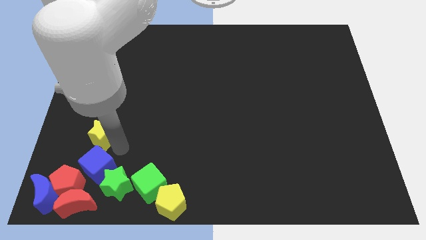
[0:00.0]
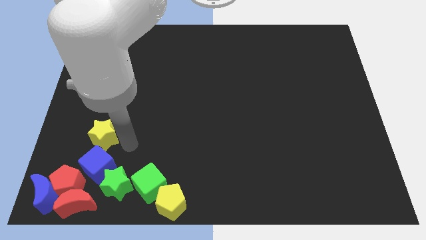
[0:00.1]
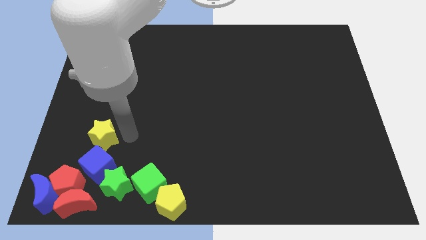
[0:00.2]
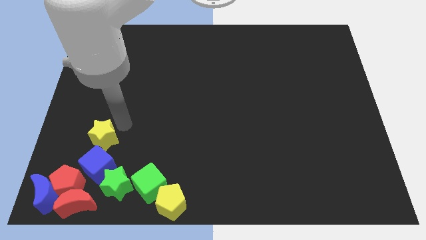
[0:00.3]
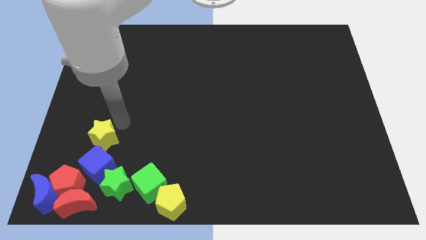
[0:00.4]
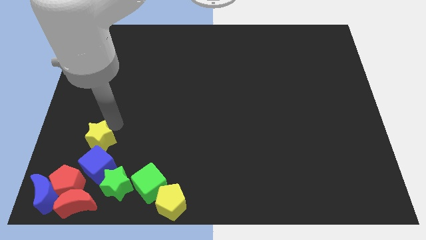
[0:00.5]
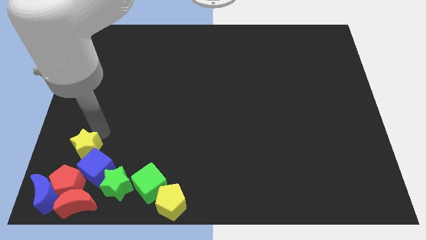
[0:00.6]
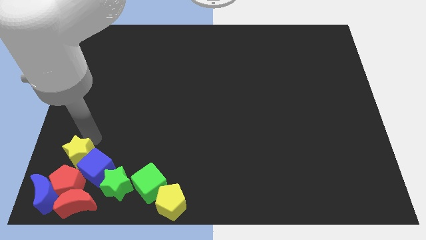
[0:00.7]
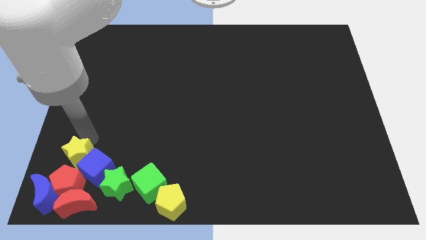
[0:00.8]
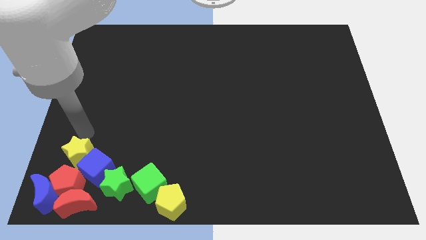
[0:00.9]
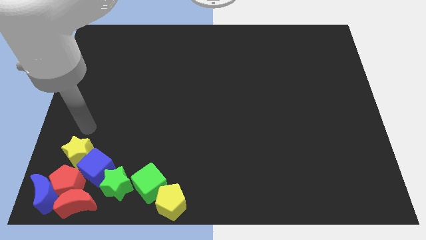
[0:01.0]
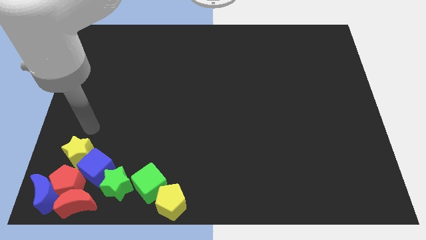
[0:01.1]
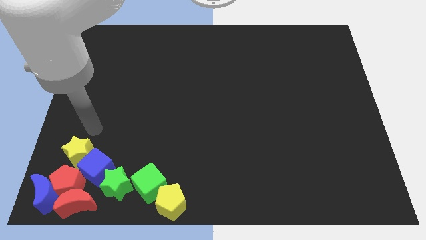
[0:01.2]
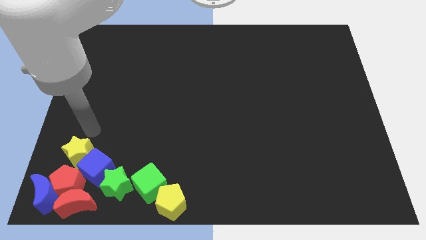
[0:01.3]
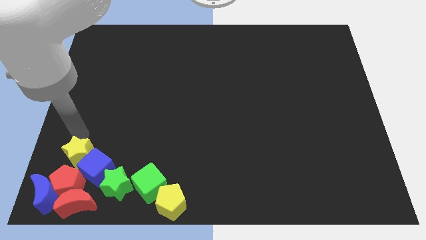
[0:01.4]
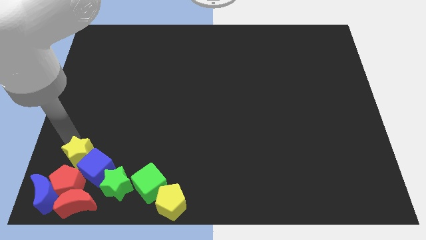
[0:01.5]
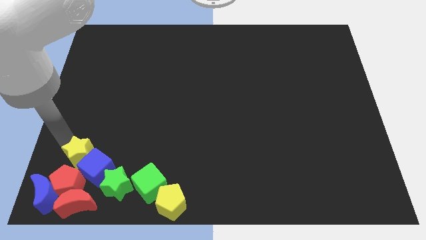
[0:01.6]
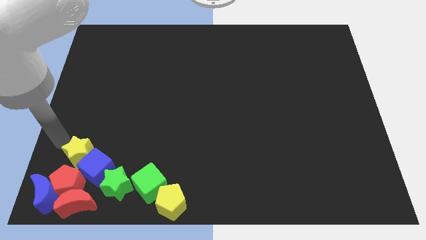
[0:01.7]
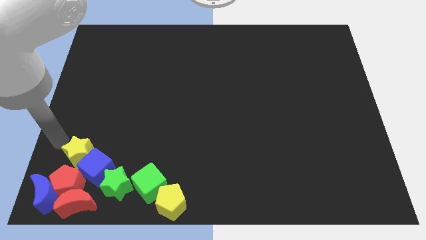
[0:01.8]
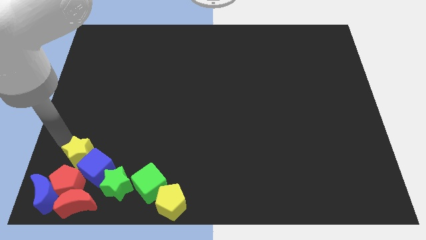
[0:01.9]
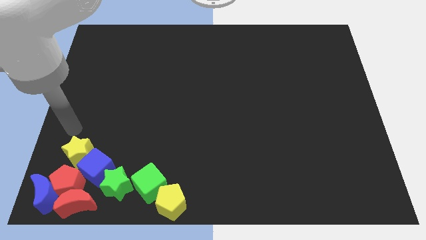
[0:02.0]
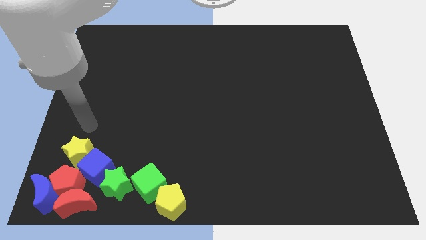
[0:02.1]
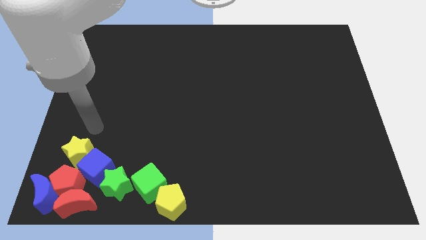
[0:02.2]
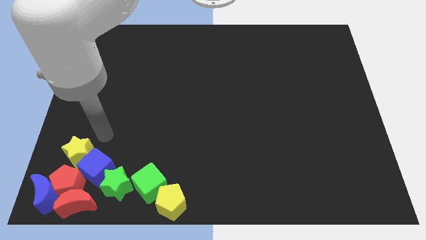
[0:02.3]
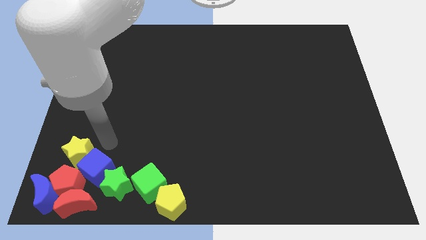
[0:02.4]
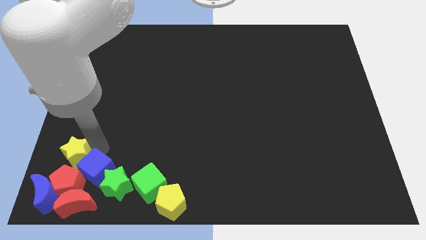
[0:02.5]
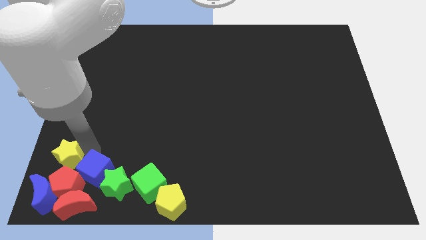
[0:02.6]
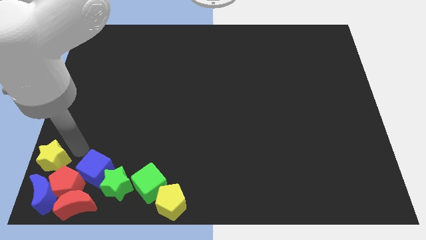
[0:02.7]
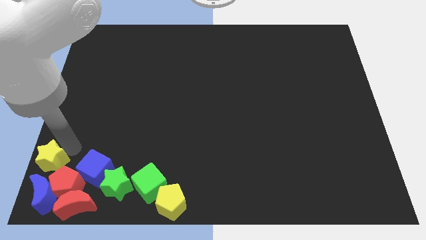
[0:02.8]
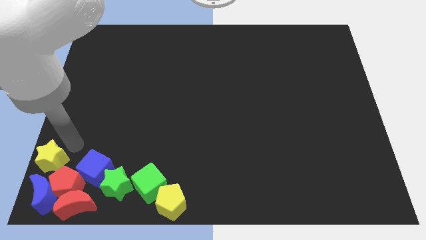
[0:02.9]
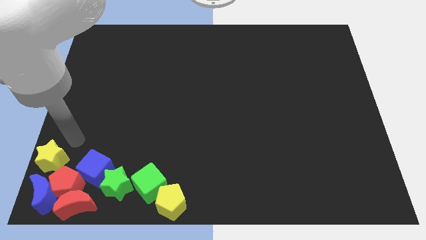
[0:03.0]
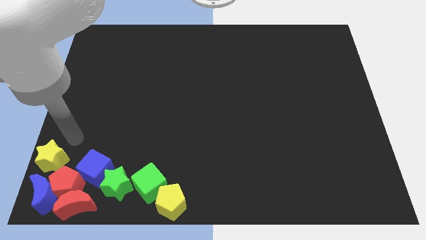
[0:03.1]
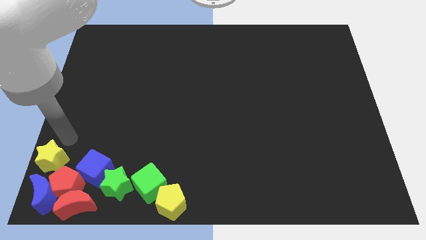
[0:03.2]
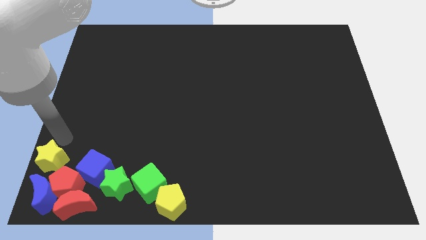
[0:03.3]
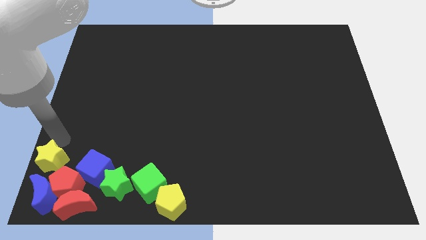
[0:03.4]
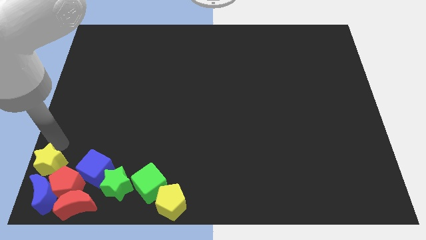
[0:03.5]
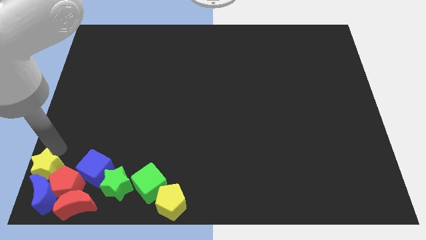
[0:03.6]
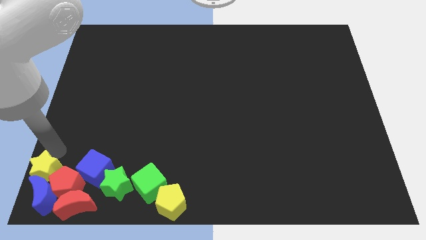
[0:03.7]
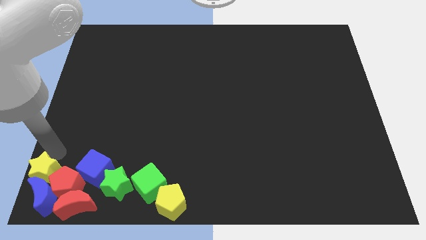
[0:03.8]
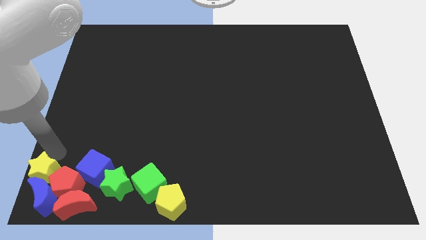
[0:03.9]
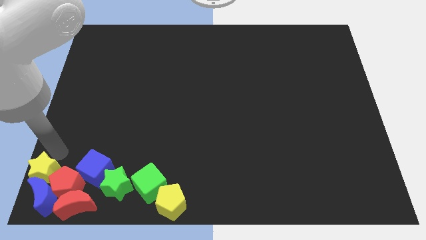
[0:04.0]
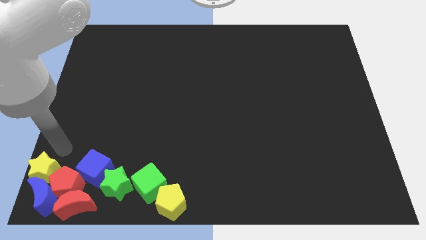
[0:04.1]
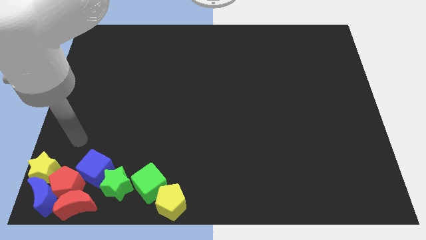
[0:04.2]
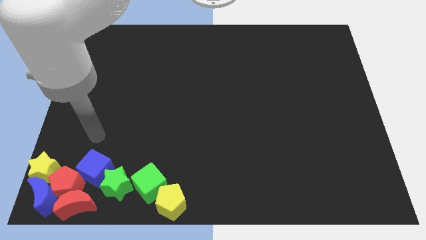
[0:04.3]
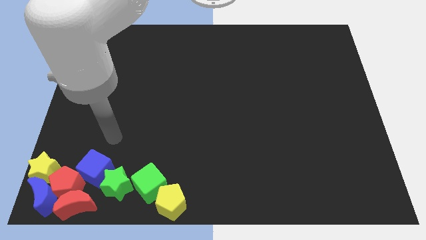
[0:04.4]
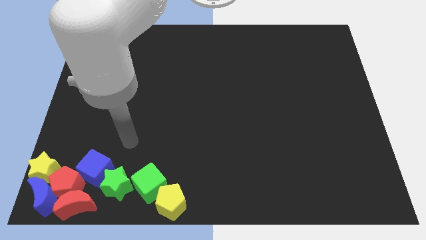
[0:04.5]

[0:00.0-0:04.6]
move the yellow star above the blue crescent

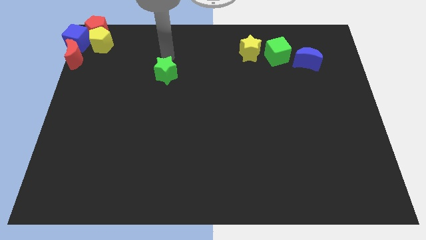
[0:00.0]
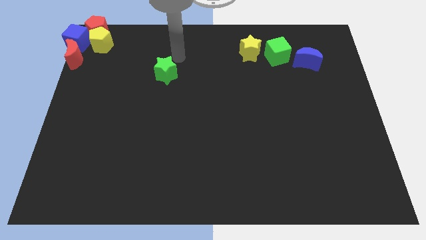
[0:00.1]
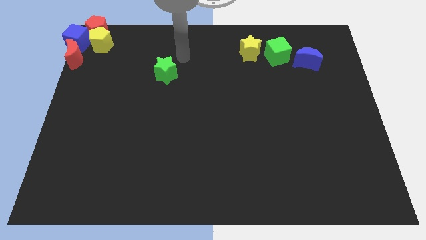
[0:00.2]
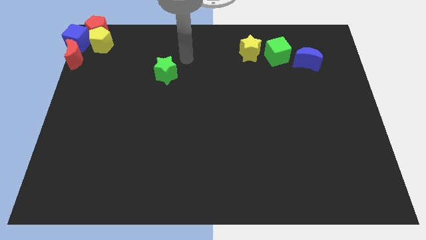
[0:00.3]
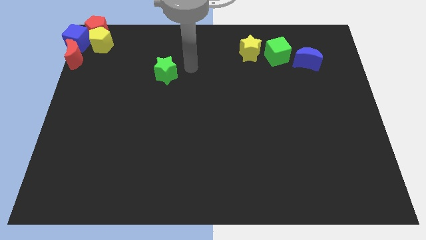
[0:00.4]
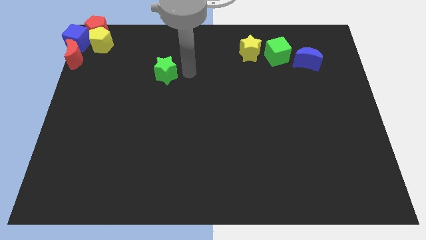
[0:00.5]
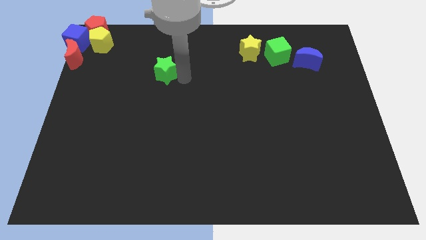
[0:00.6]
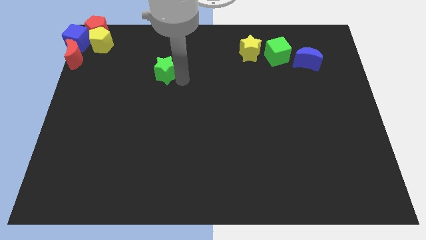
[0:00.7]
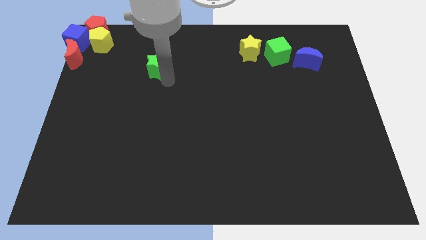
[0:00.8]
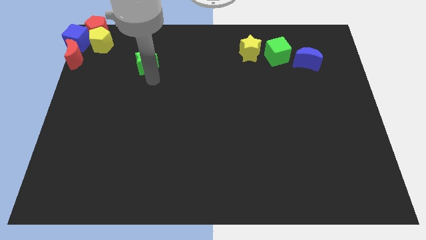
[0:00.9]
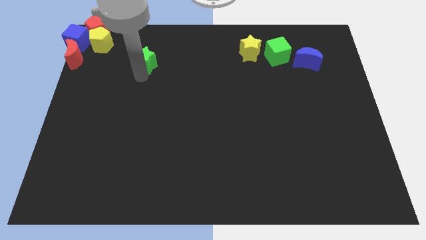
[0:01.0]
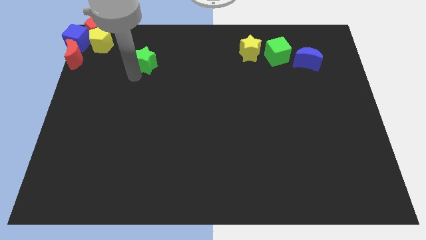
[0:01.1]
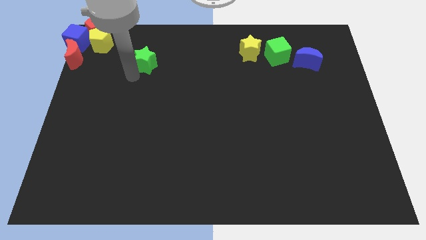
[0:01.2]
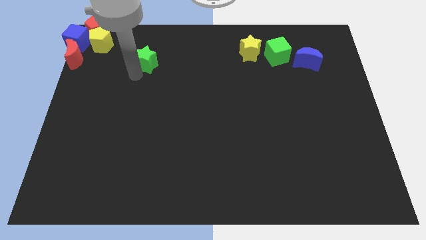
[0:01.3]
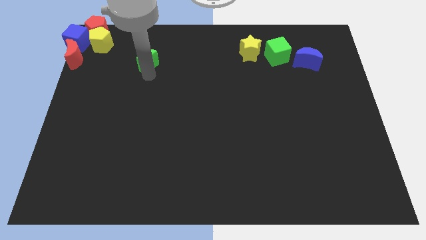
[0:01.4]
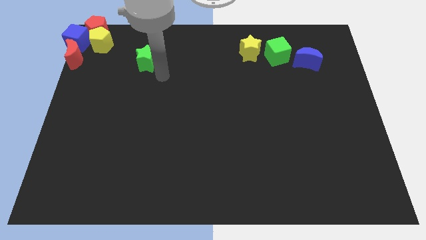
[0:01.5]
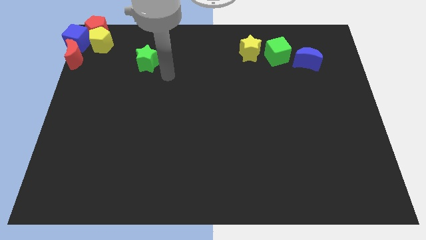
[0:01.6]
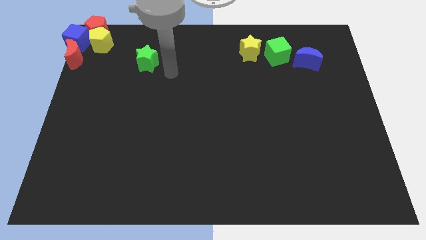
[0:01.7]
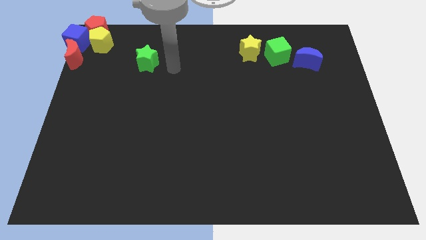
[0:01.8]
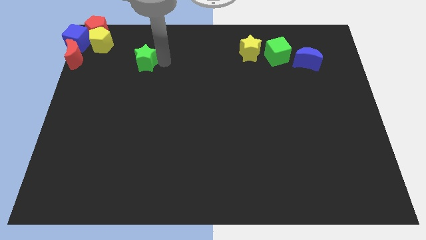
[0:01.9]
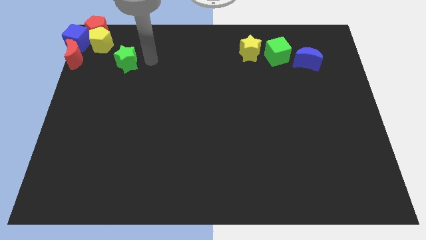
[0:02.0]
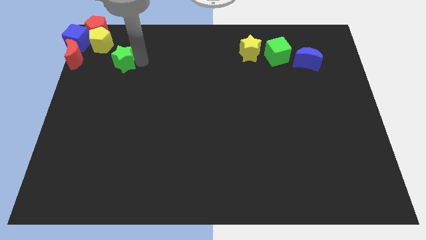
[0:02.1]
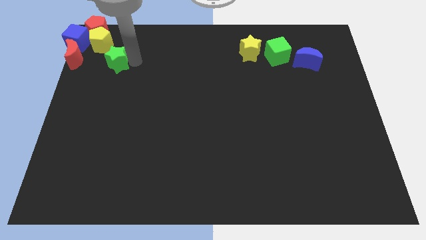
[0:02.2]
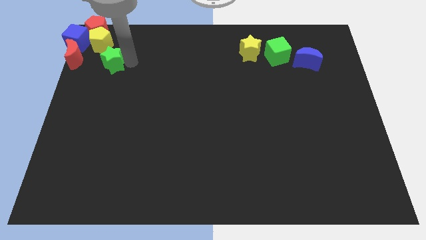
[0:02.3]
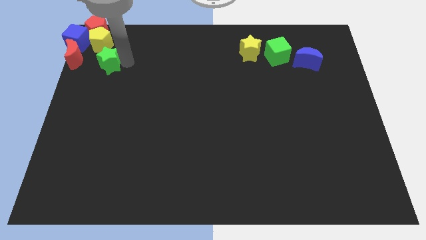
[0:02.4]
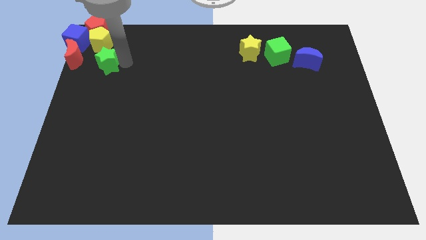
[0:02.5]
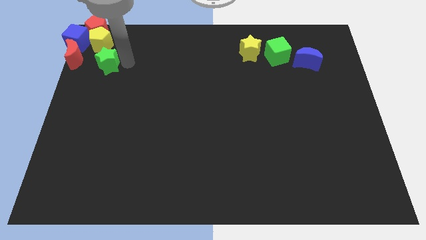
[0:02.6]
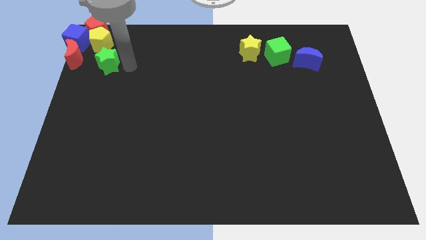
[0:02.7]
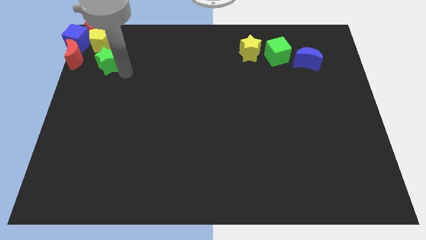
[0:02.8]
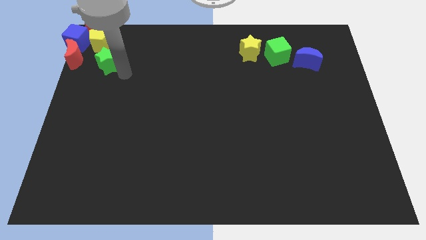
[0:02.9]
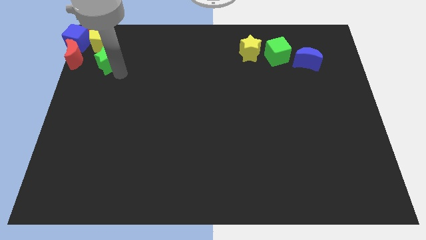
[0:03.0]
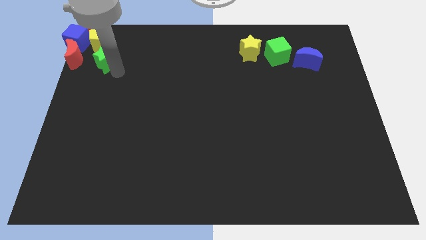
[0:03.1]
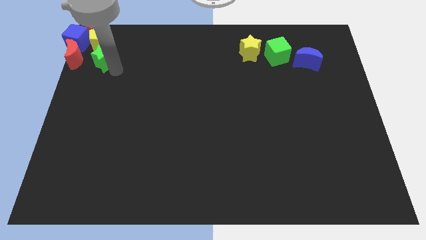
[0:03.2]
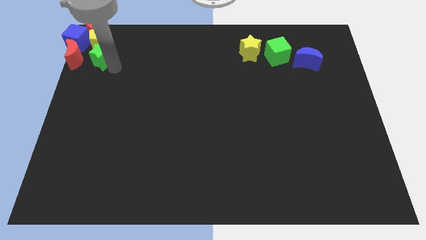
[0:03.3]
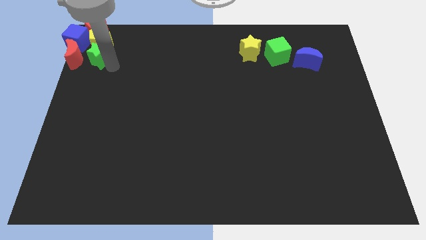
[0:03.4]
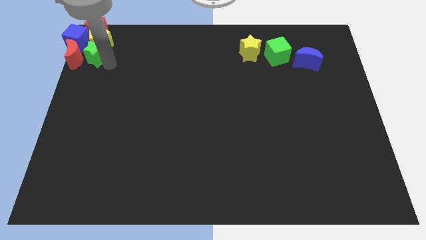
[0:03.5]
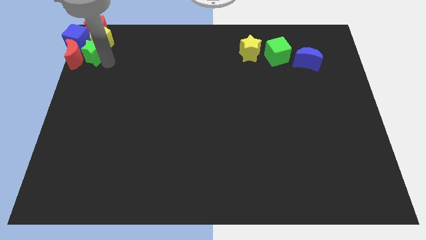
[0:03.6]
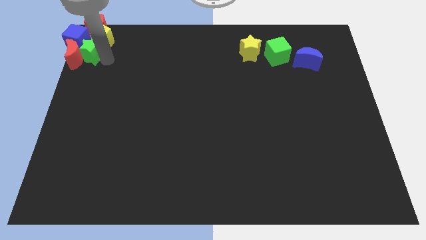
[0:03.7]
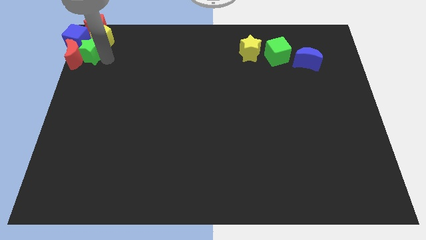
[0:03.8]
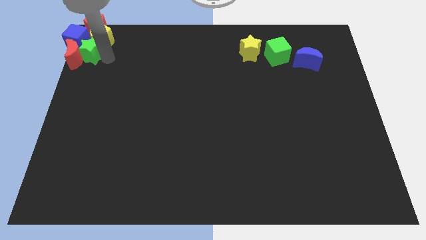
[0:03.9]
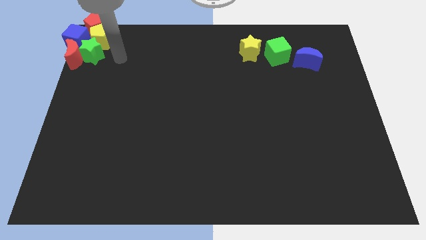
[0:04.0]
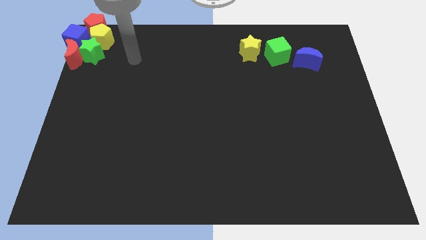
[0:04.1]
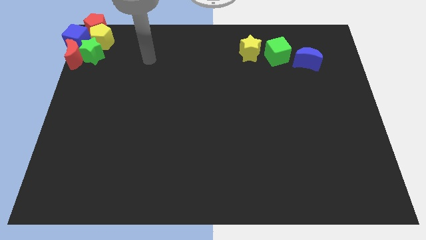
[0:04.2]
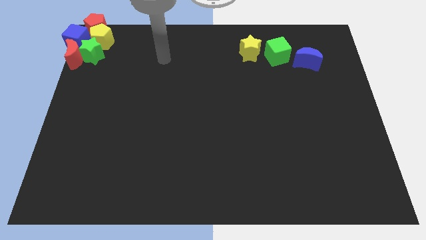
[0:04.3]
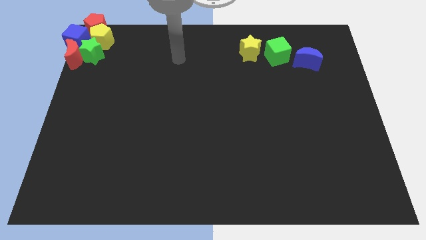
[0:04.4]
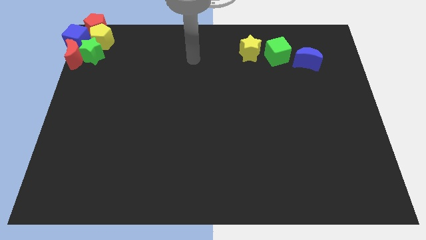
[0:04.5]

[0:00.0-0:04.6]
move the green star into the group of blocks
